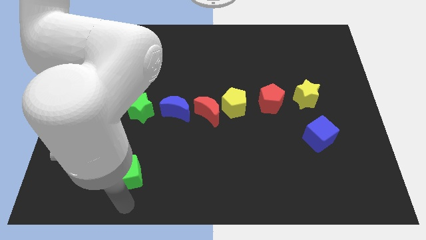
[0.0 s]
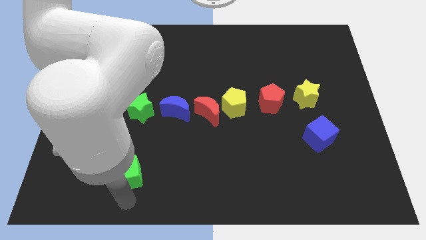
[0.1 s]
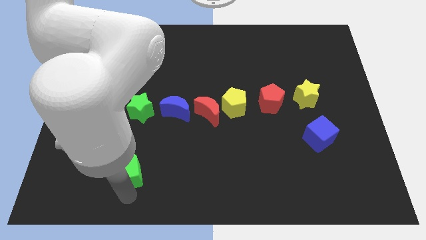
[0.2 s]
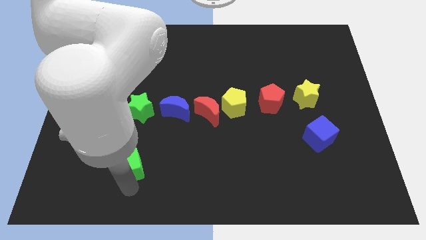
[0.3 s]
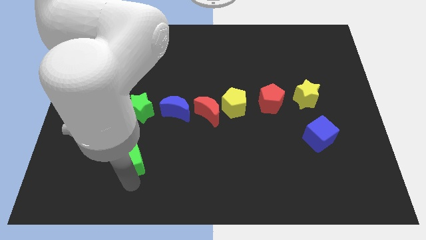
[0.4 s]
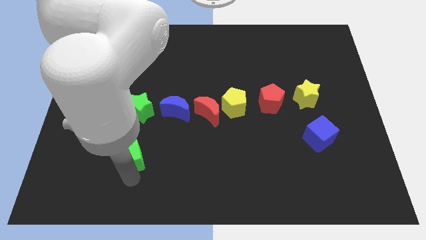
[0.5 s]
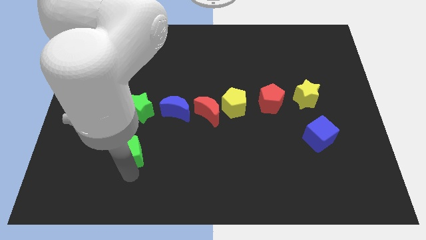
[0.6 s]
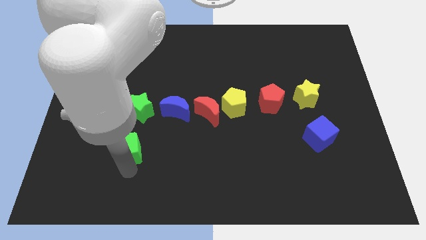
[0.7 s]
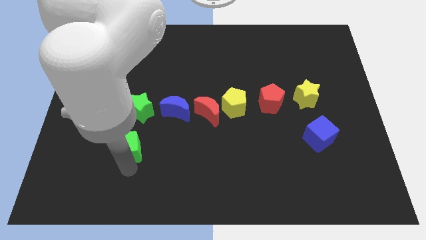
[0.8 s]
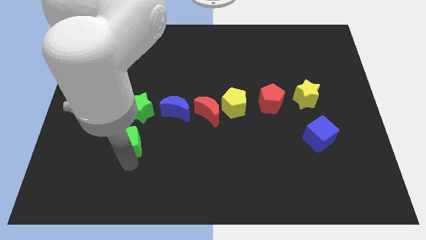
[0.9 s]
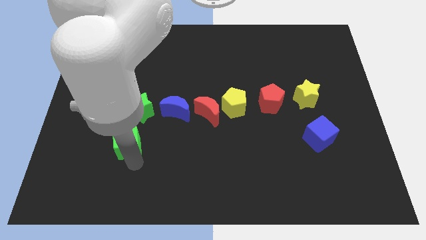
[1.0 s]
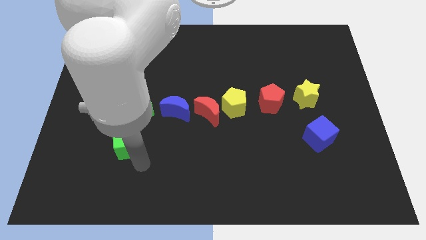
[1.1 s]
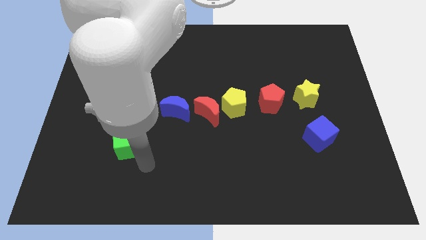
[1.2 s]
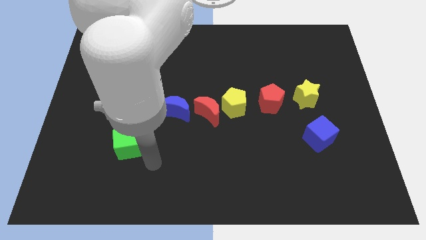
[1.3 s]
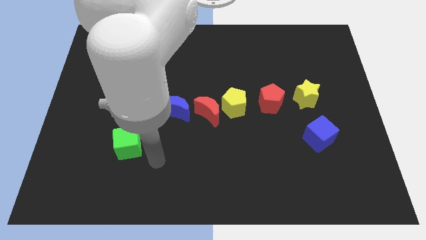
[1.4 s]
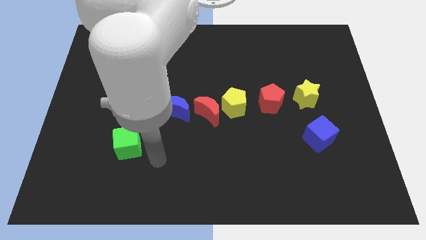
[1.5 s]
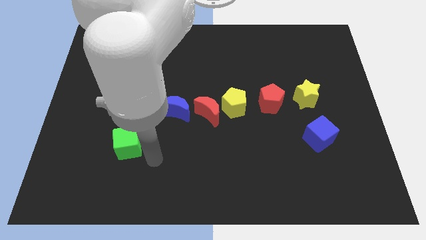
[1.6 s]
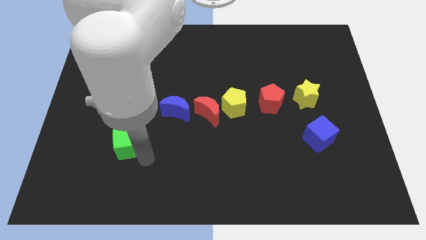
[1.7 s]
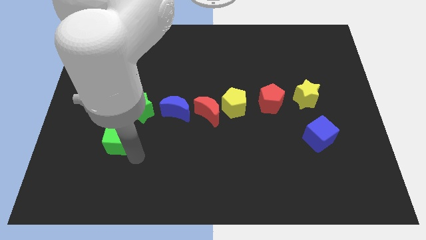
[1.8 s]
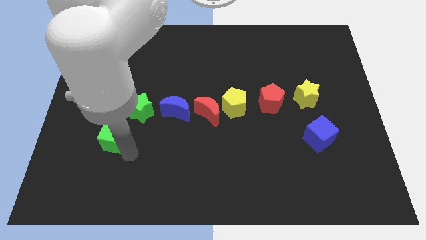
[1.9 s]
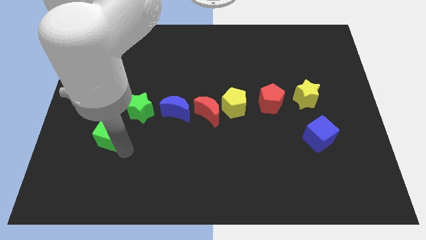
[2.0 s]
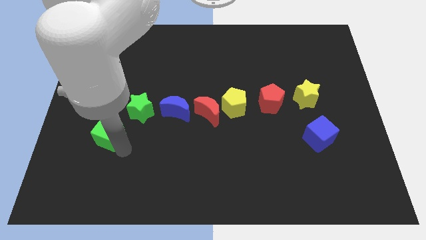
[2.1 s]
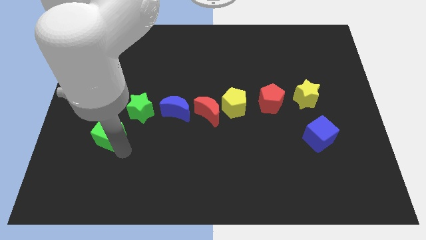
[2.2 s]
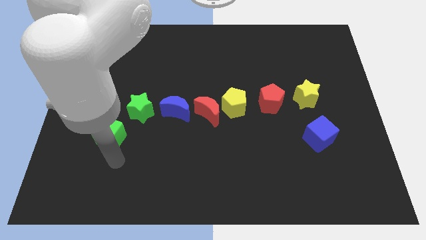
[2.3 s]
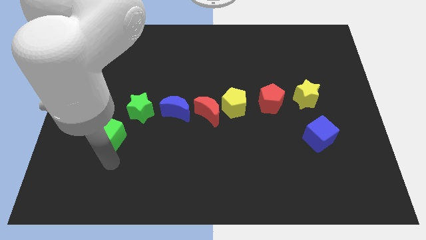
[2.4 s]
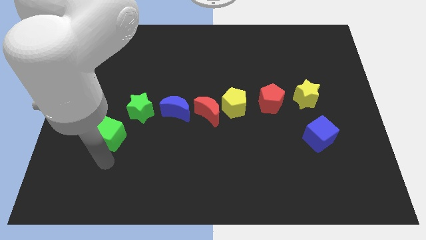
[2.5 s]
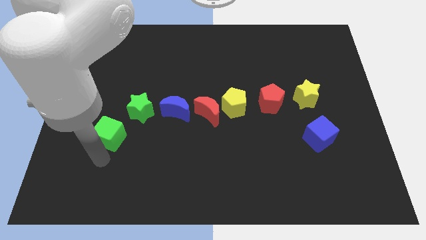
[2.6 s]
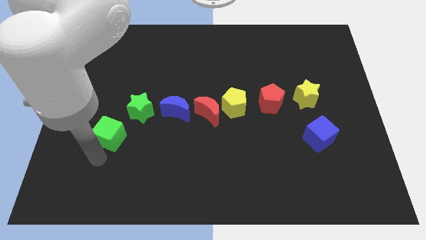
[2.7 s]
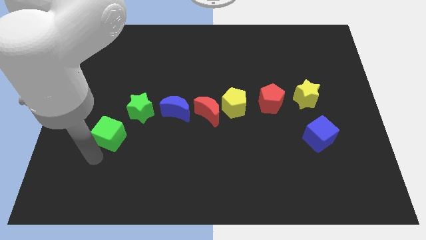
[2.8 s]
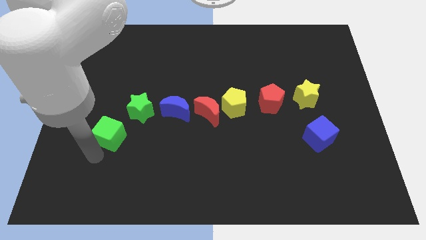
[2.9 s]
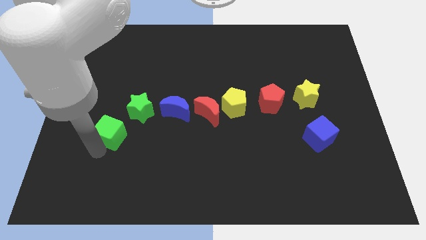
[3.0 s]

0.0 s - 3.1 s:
move the green cube diagonally to the left of the green star

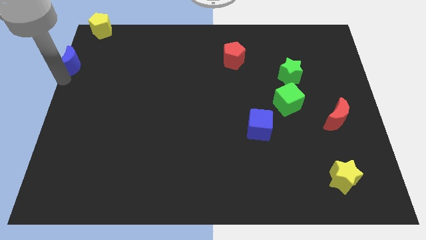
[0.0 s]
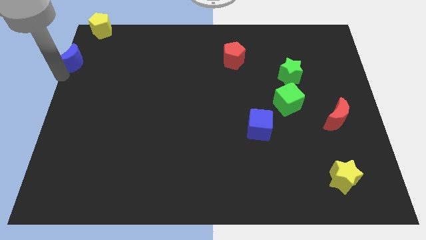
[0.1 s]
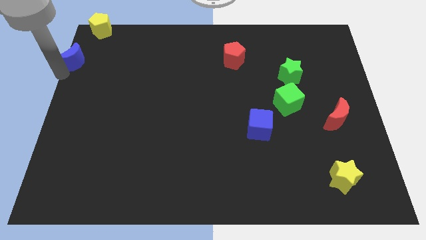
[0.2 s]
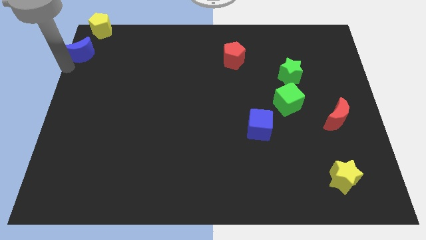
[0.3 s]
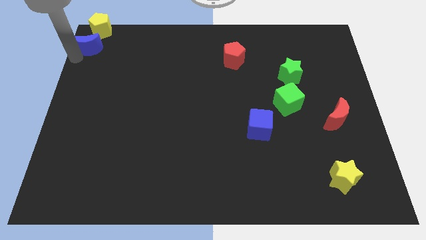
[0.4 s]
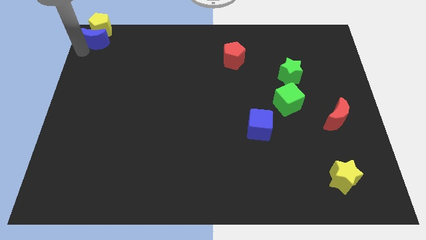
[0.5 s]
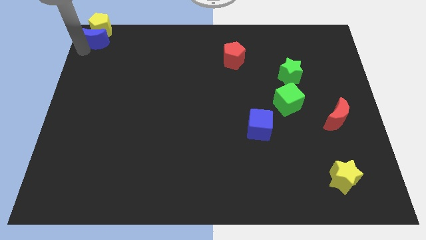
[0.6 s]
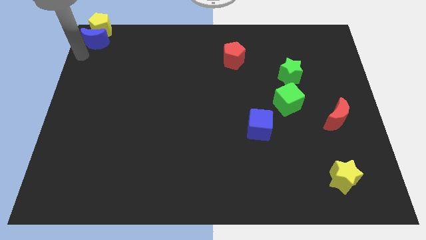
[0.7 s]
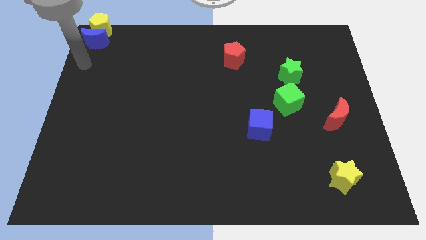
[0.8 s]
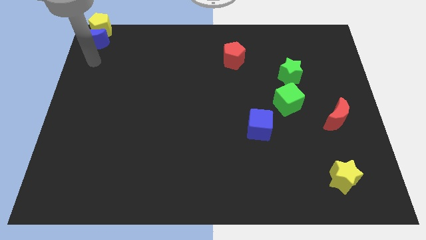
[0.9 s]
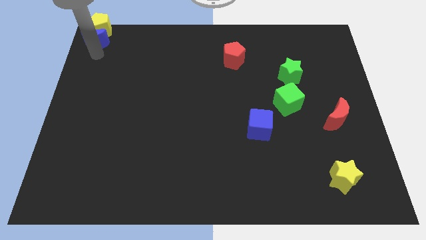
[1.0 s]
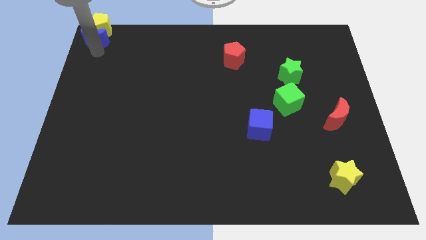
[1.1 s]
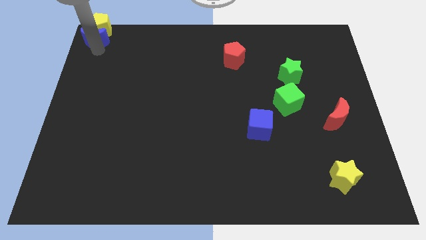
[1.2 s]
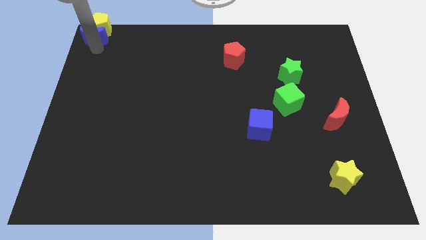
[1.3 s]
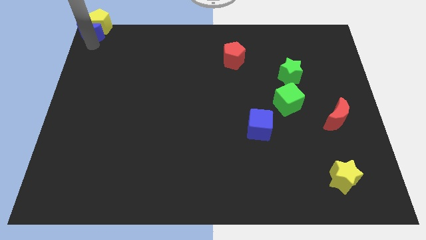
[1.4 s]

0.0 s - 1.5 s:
push the blue crescent into yellow star

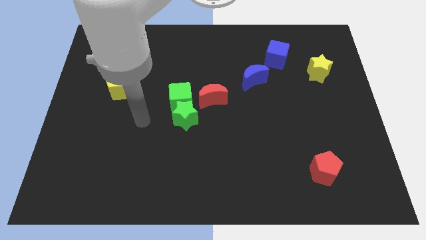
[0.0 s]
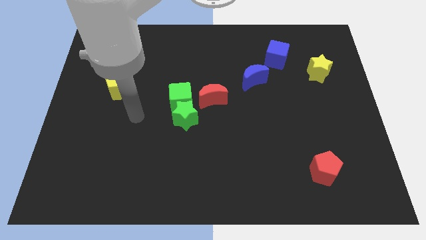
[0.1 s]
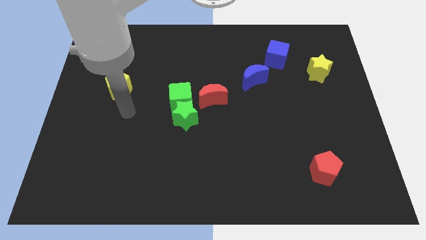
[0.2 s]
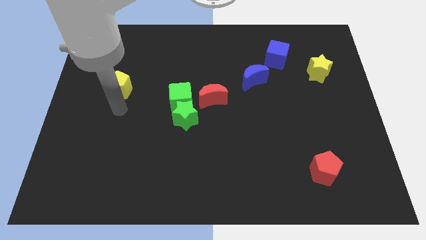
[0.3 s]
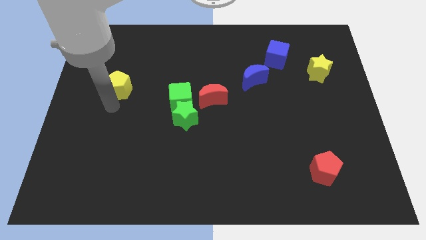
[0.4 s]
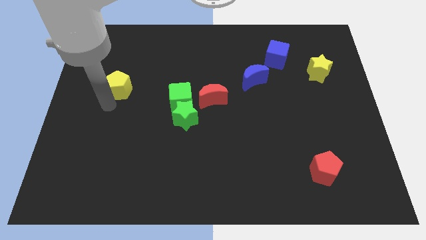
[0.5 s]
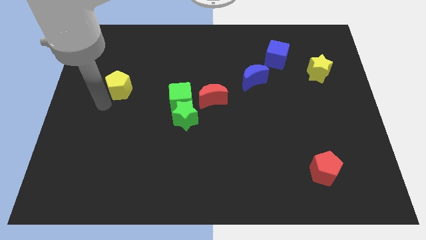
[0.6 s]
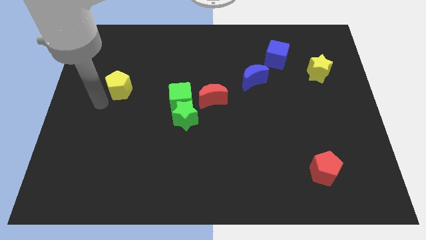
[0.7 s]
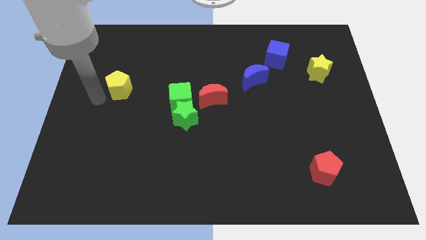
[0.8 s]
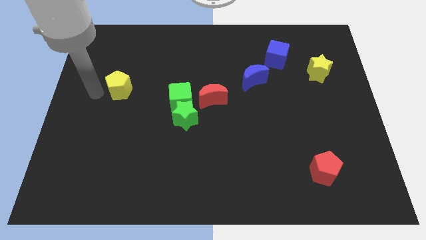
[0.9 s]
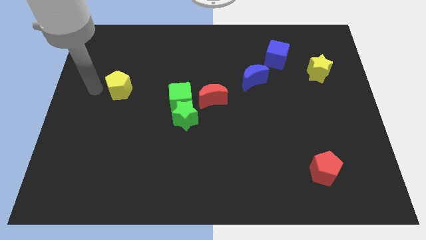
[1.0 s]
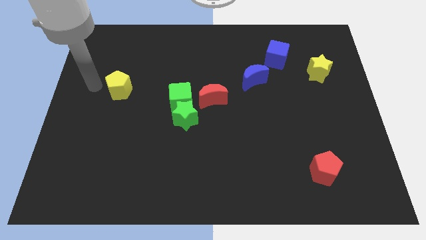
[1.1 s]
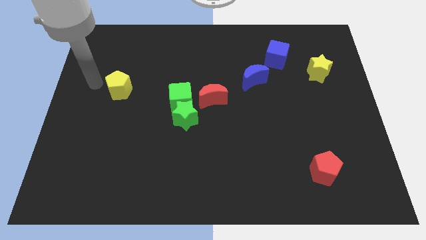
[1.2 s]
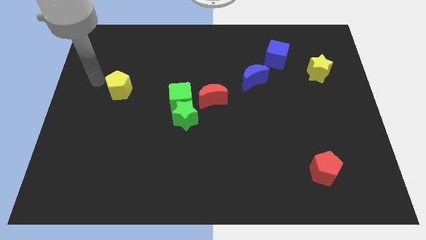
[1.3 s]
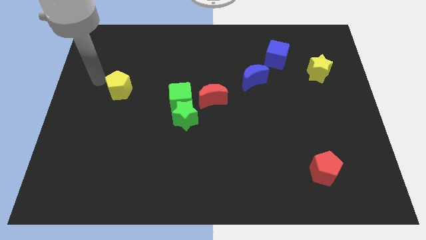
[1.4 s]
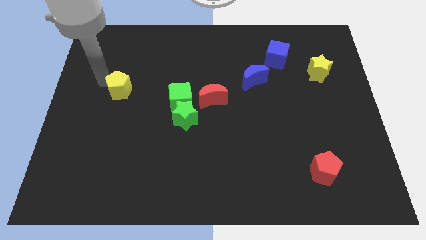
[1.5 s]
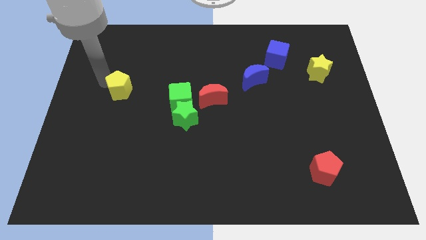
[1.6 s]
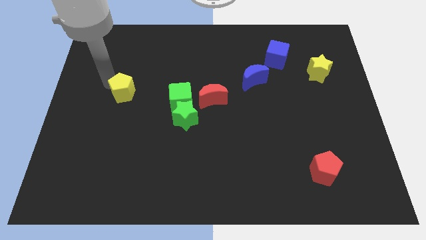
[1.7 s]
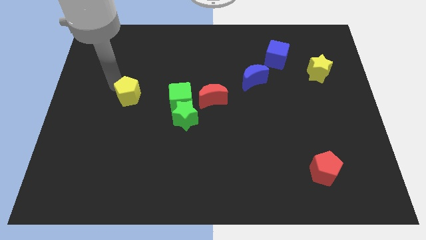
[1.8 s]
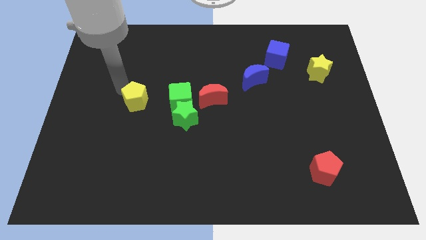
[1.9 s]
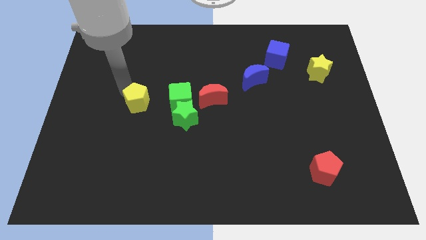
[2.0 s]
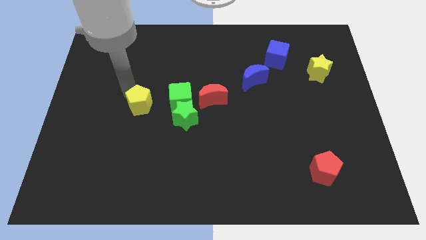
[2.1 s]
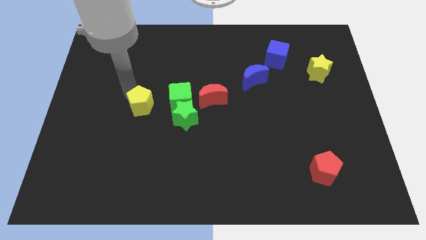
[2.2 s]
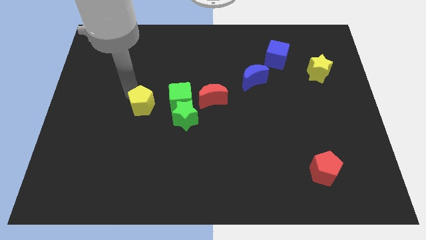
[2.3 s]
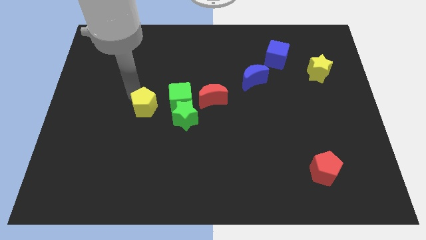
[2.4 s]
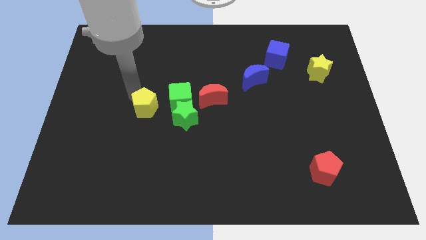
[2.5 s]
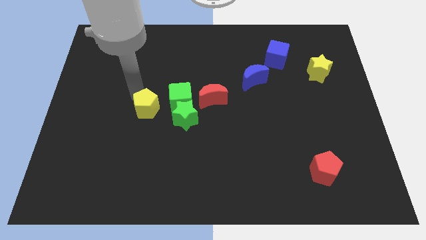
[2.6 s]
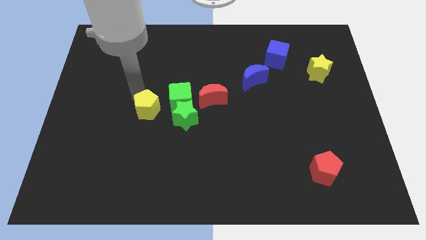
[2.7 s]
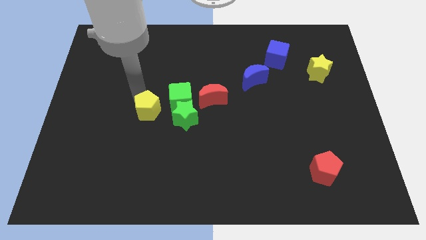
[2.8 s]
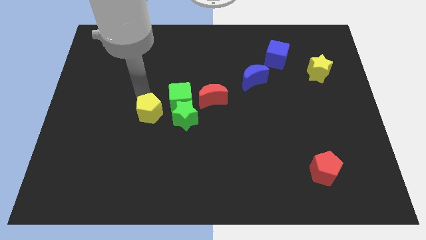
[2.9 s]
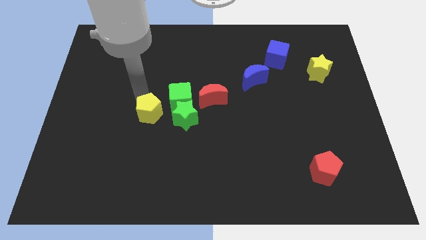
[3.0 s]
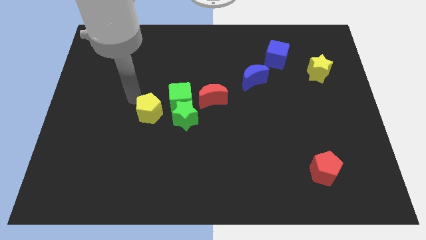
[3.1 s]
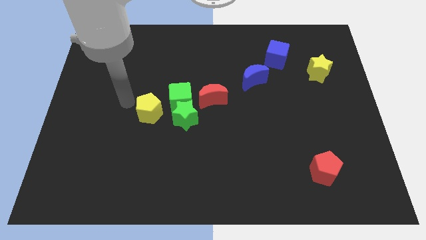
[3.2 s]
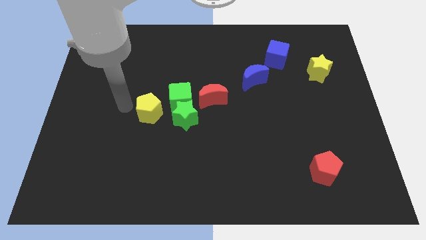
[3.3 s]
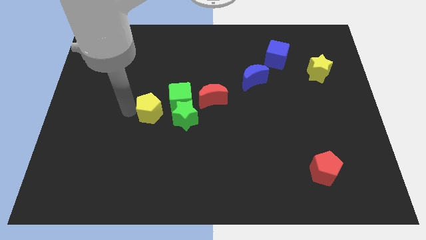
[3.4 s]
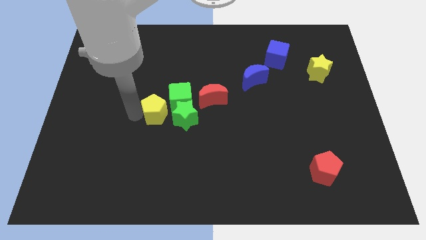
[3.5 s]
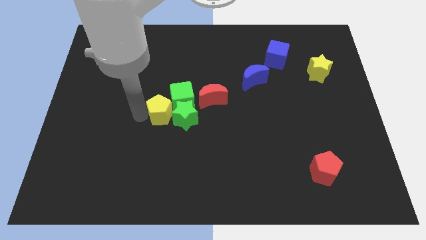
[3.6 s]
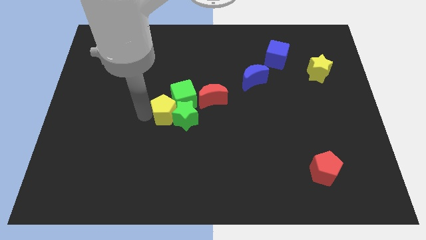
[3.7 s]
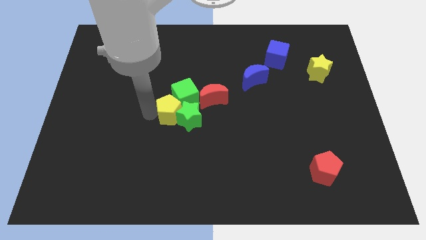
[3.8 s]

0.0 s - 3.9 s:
push the yellow pentagon to the left of the green blocks

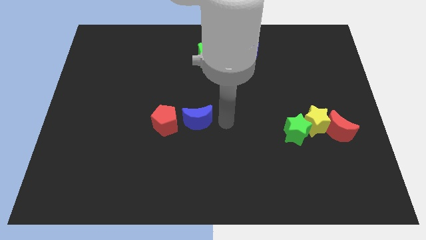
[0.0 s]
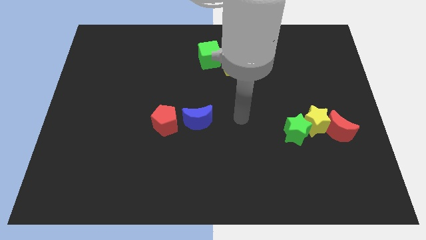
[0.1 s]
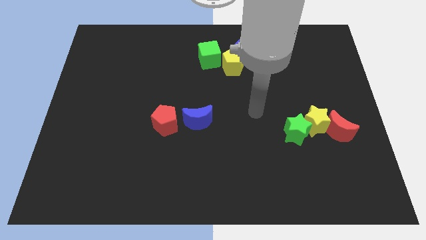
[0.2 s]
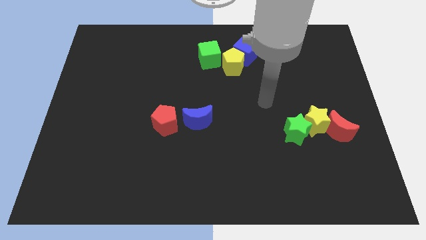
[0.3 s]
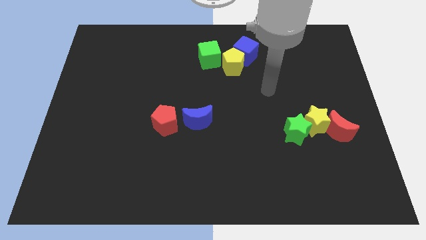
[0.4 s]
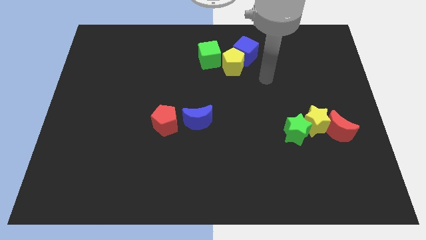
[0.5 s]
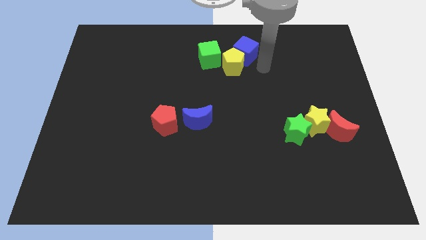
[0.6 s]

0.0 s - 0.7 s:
move the arm to the right of the yellow pentagon
